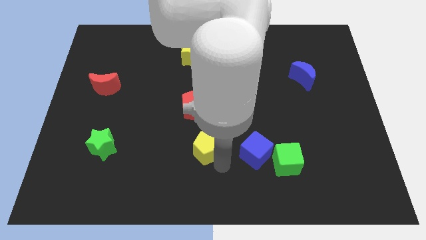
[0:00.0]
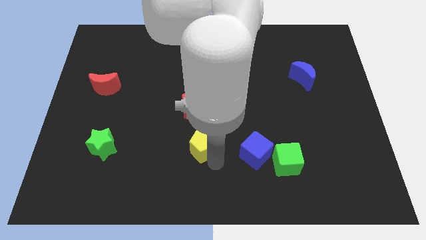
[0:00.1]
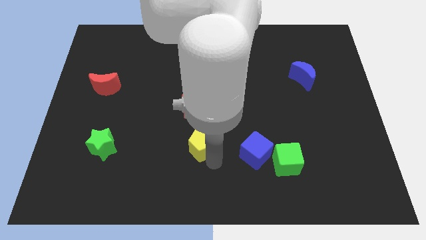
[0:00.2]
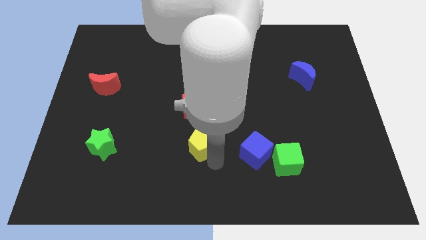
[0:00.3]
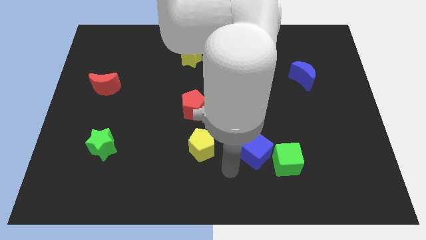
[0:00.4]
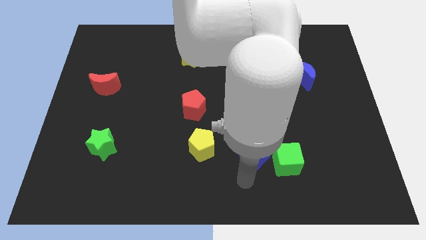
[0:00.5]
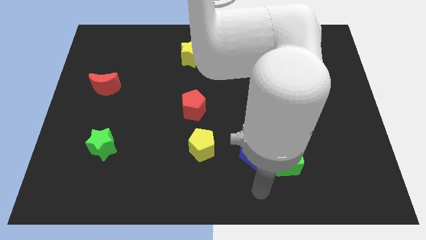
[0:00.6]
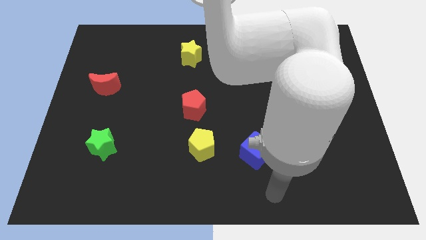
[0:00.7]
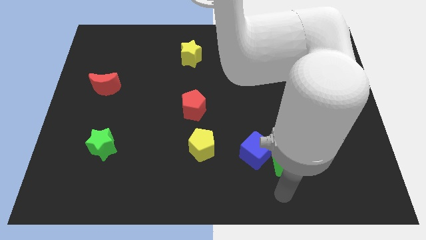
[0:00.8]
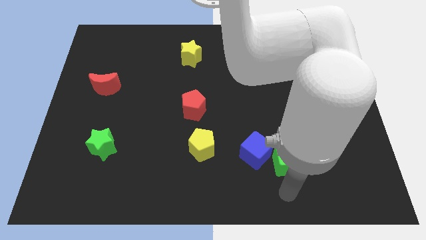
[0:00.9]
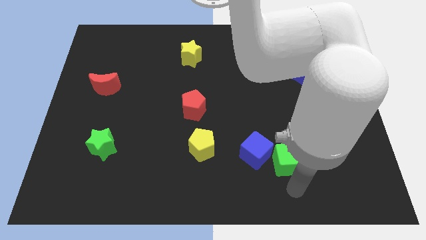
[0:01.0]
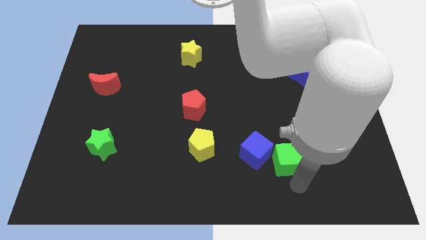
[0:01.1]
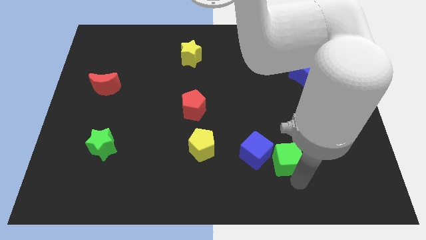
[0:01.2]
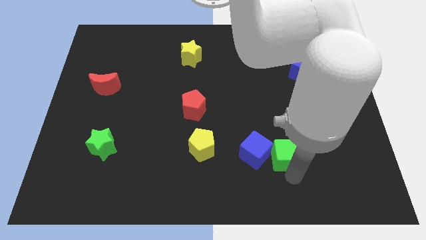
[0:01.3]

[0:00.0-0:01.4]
move your hand to the bottom of the green cube

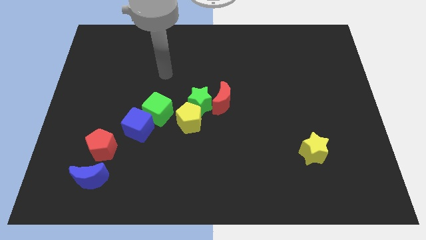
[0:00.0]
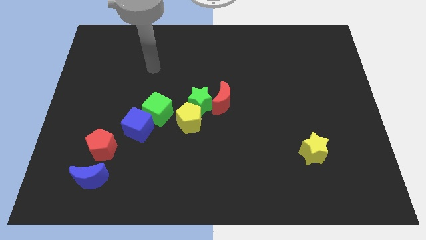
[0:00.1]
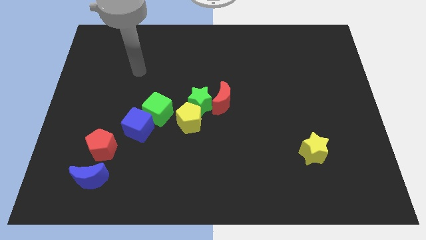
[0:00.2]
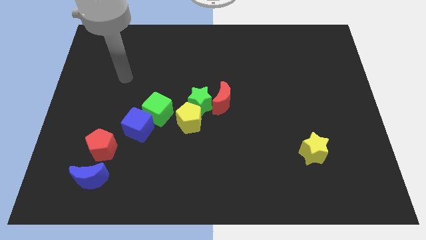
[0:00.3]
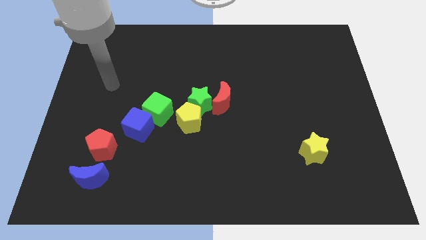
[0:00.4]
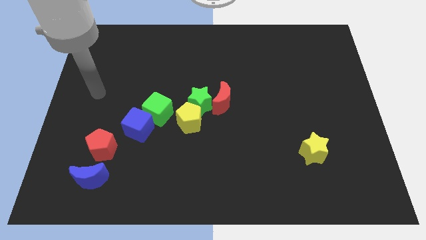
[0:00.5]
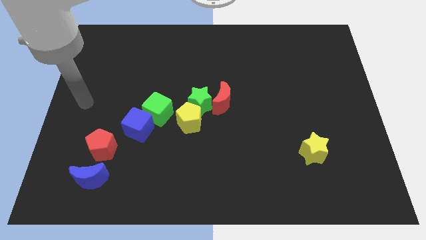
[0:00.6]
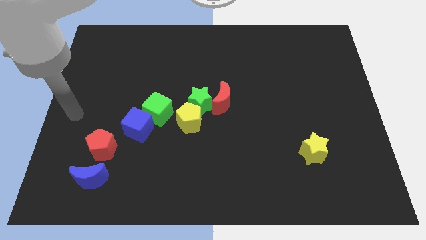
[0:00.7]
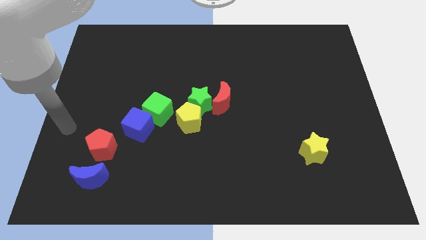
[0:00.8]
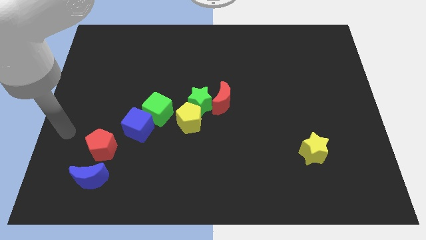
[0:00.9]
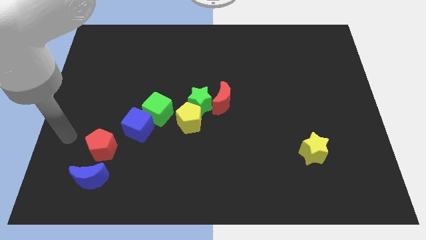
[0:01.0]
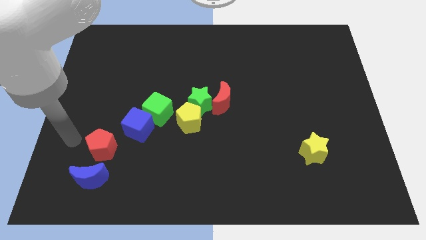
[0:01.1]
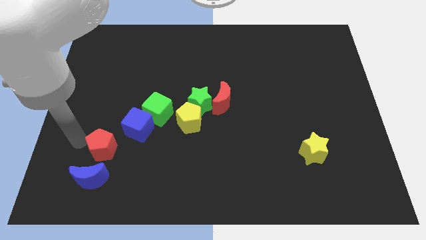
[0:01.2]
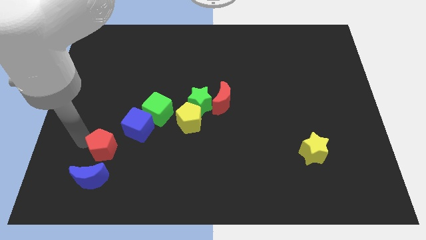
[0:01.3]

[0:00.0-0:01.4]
touch the left side of the red pentagon

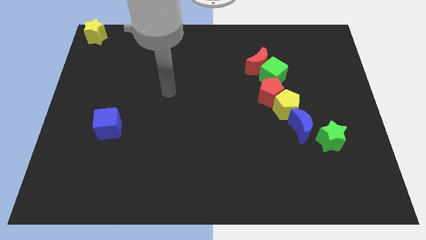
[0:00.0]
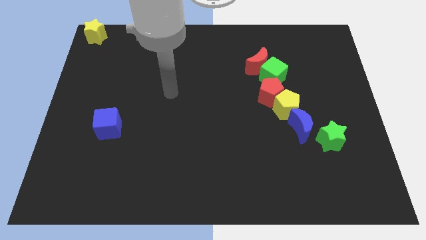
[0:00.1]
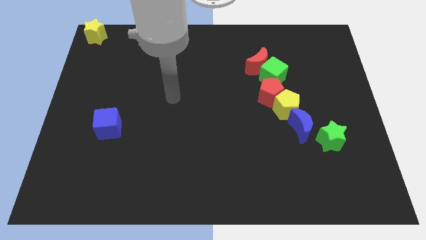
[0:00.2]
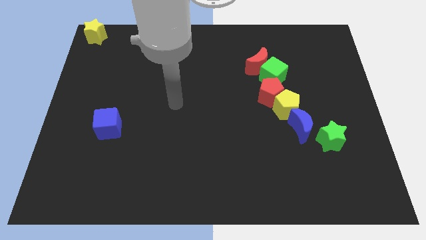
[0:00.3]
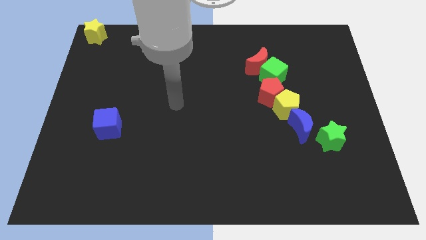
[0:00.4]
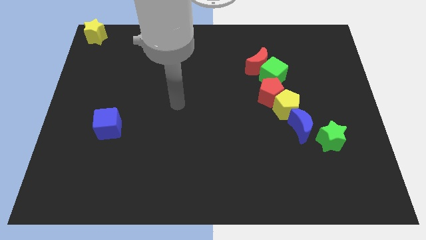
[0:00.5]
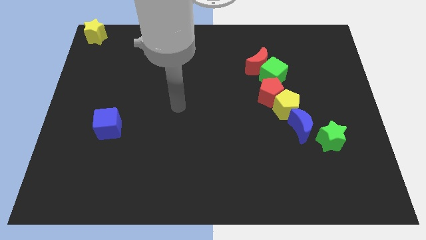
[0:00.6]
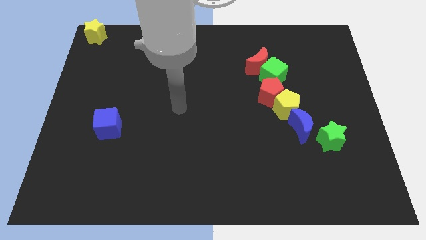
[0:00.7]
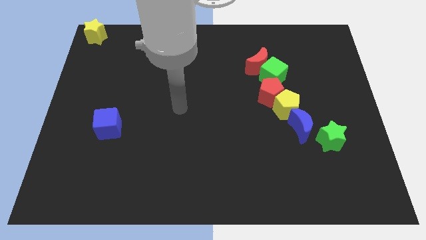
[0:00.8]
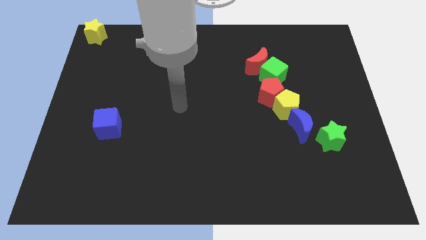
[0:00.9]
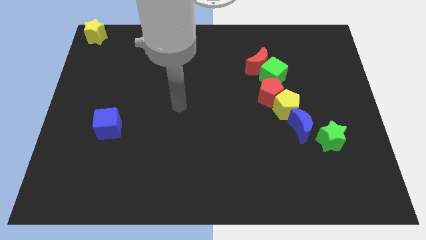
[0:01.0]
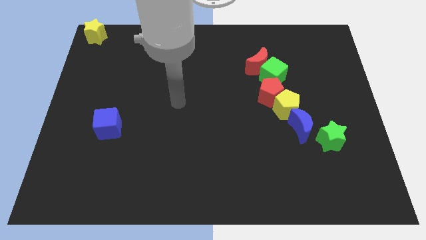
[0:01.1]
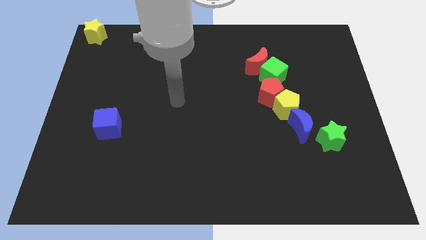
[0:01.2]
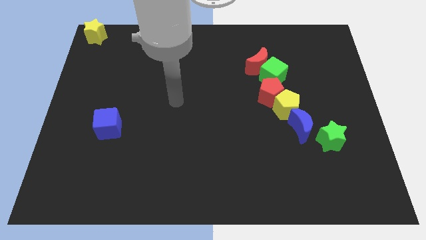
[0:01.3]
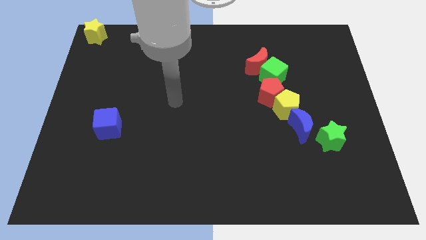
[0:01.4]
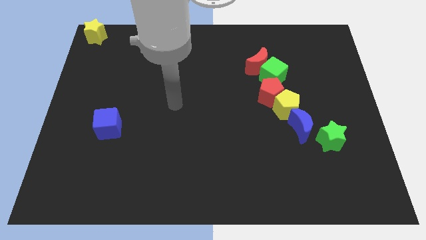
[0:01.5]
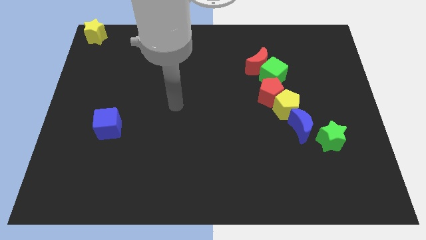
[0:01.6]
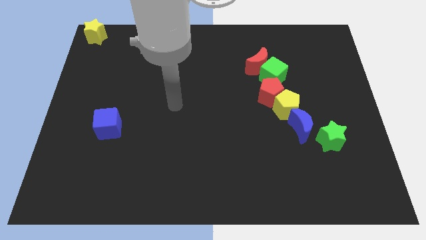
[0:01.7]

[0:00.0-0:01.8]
move your hand towards the bottom side

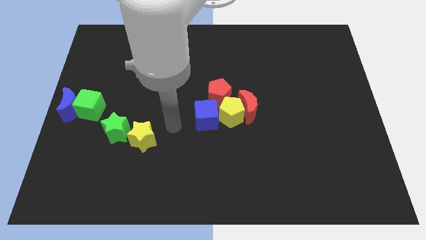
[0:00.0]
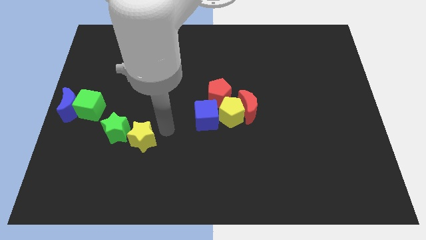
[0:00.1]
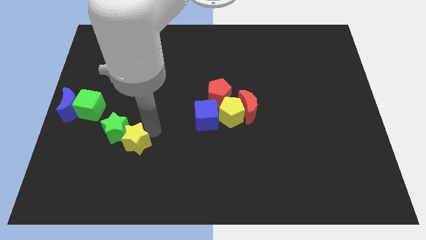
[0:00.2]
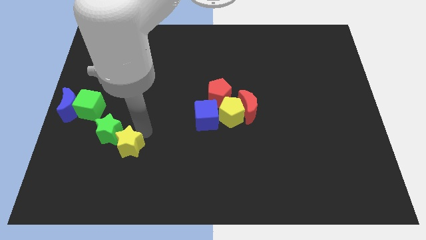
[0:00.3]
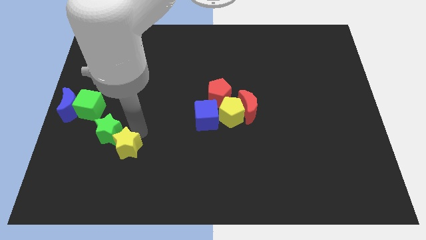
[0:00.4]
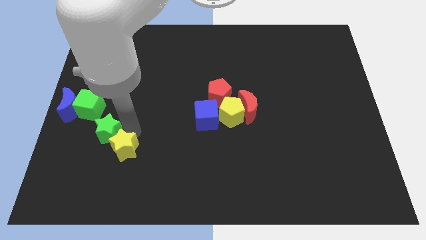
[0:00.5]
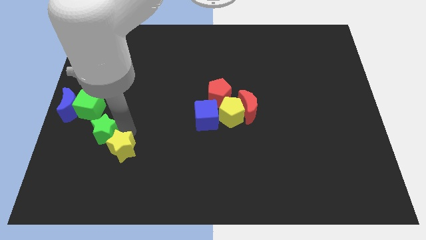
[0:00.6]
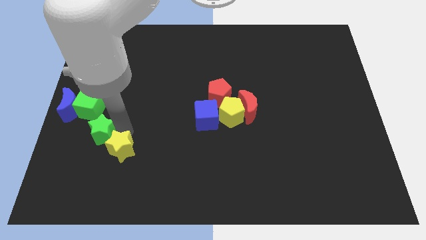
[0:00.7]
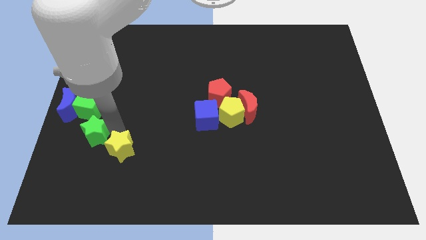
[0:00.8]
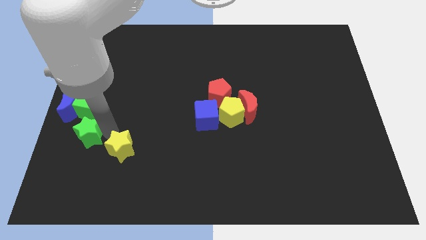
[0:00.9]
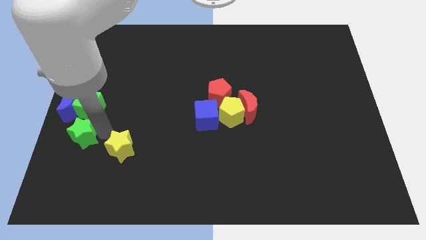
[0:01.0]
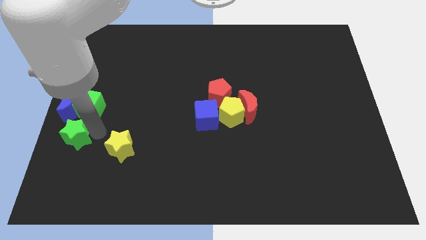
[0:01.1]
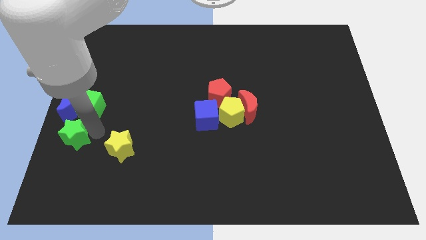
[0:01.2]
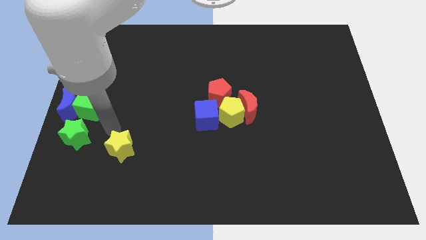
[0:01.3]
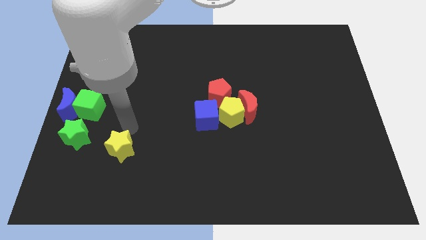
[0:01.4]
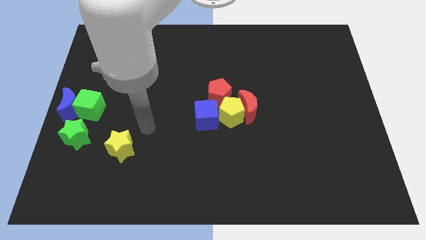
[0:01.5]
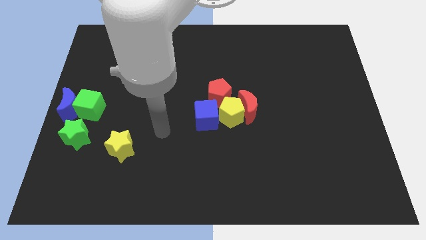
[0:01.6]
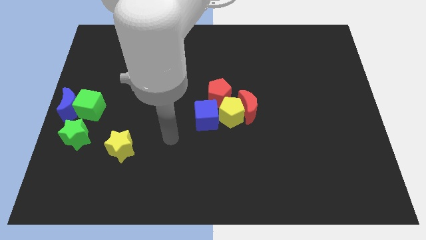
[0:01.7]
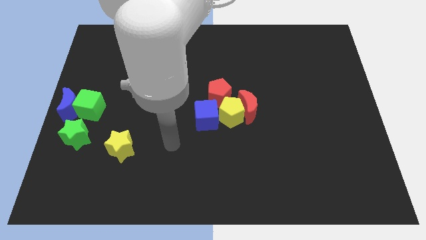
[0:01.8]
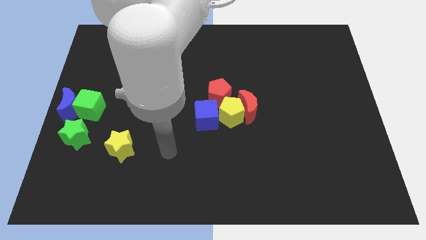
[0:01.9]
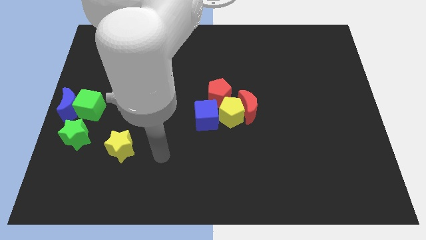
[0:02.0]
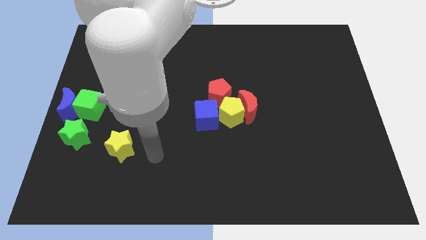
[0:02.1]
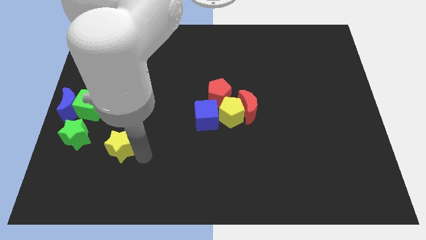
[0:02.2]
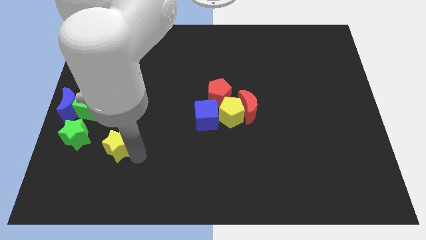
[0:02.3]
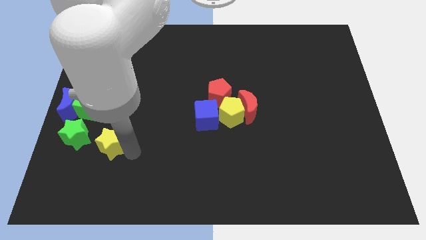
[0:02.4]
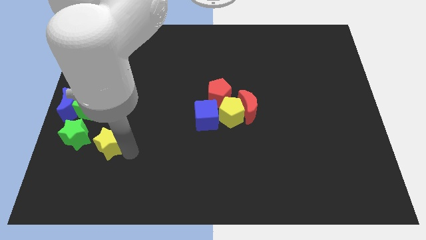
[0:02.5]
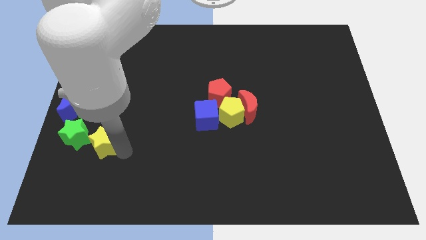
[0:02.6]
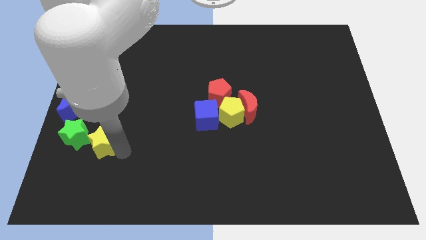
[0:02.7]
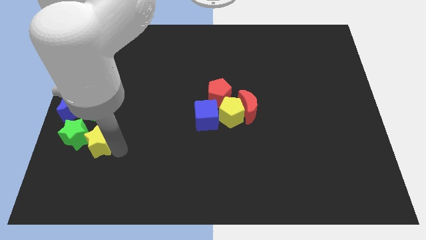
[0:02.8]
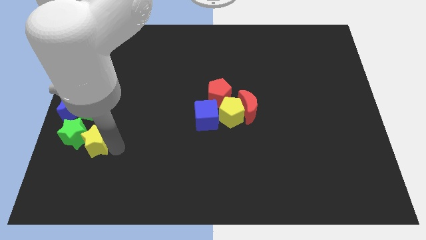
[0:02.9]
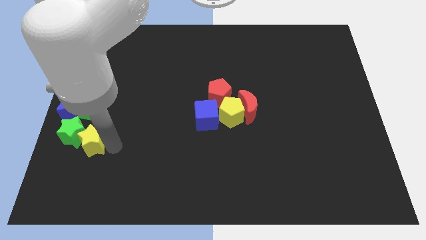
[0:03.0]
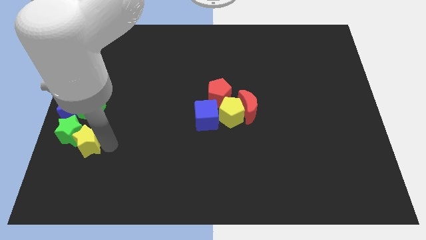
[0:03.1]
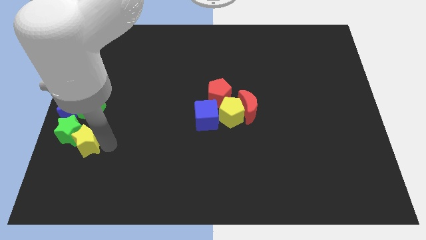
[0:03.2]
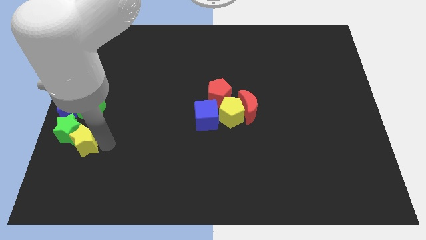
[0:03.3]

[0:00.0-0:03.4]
move the green star and yellow star to the left side of the board

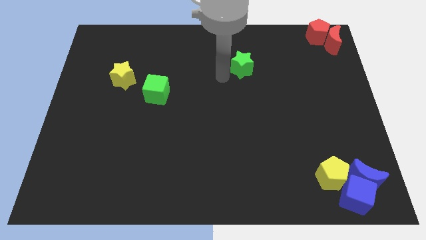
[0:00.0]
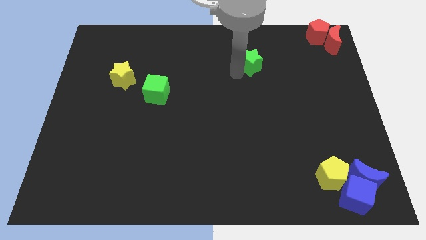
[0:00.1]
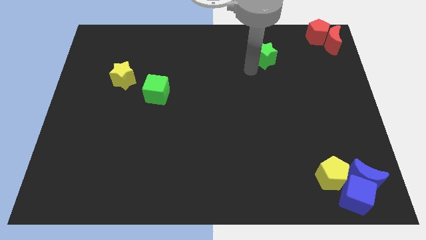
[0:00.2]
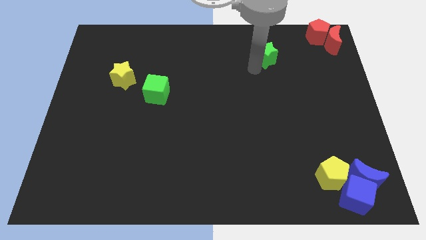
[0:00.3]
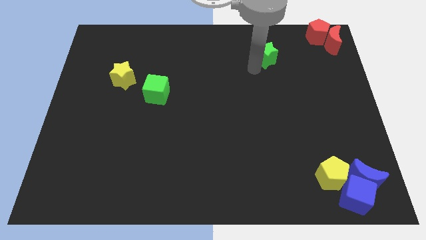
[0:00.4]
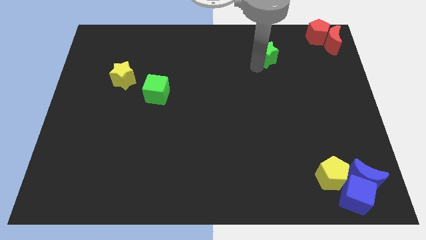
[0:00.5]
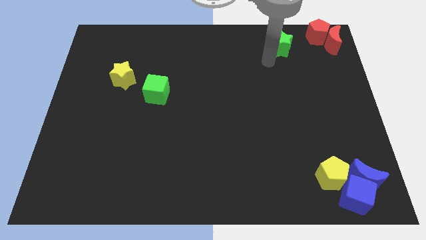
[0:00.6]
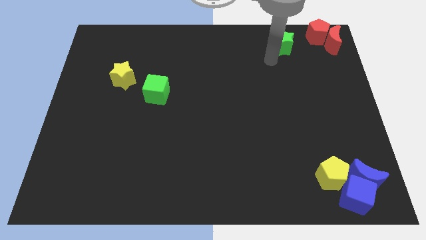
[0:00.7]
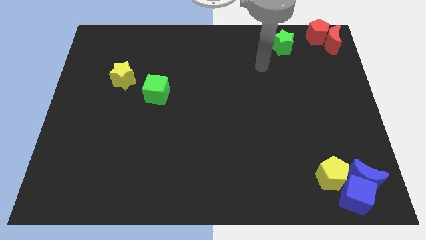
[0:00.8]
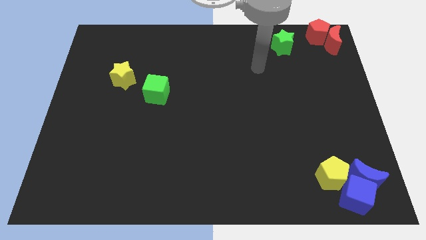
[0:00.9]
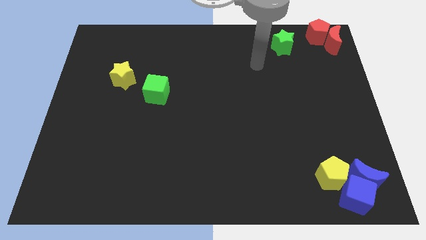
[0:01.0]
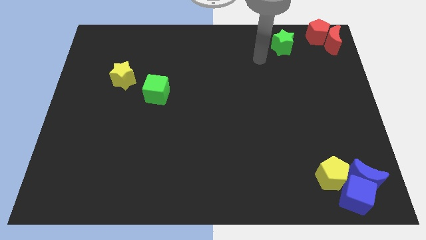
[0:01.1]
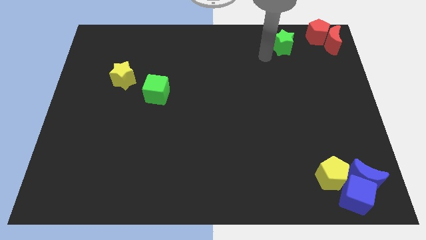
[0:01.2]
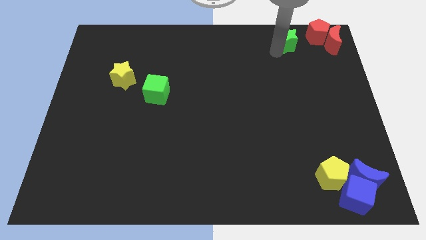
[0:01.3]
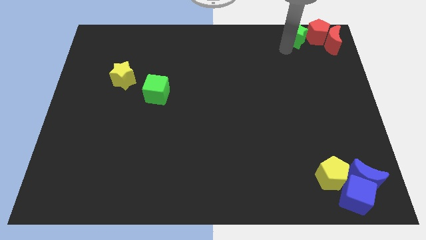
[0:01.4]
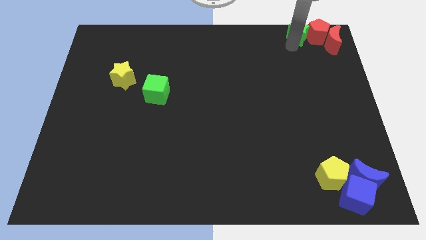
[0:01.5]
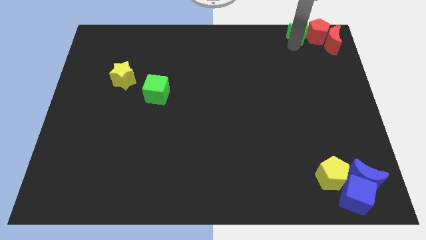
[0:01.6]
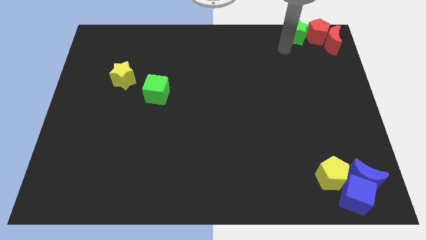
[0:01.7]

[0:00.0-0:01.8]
push the green star into the red pentagon
